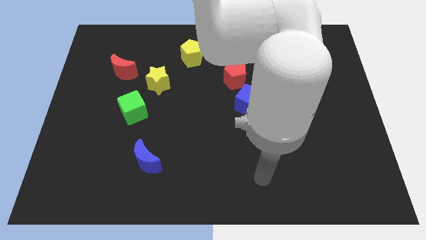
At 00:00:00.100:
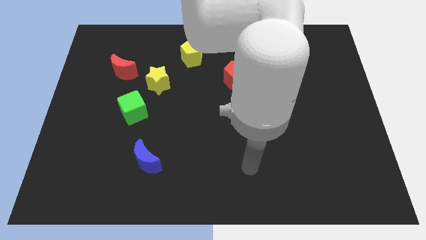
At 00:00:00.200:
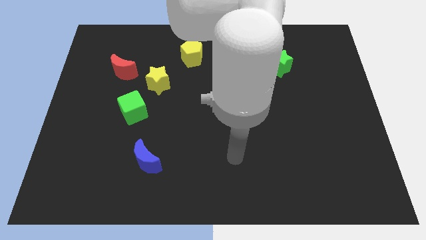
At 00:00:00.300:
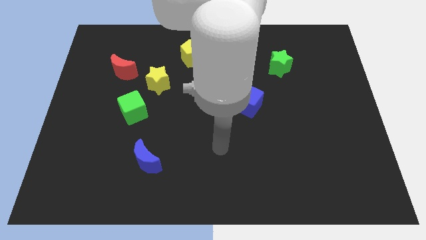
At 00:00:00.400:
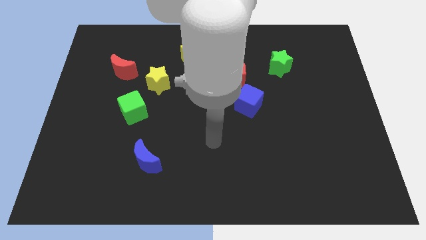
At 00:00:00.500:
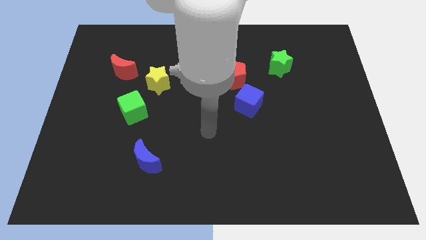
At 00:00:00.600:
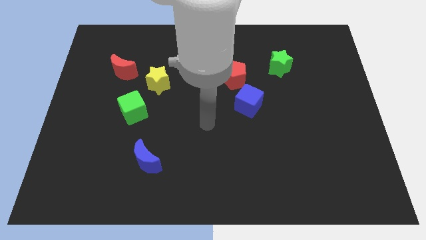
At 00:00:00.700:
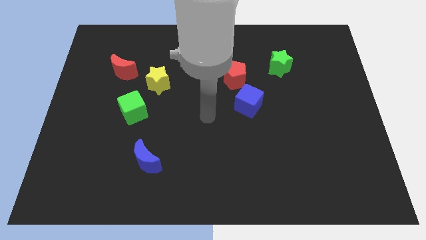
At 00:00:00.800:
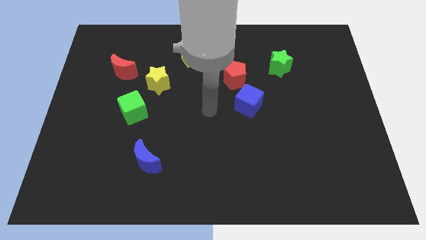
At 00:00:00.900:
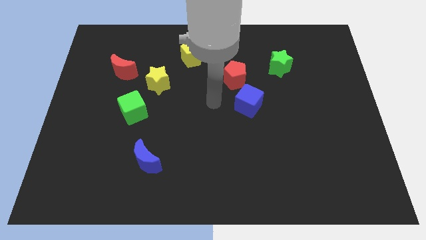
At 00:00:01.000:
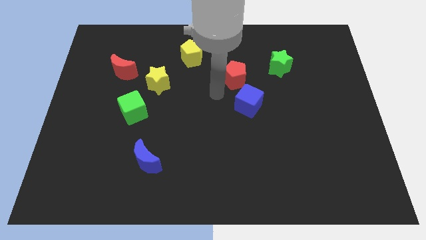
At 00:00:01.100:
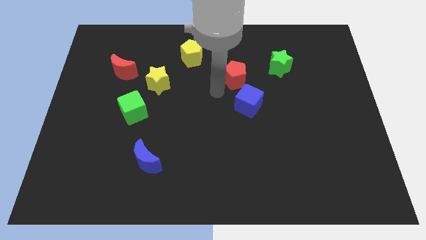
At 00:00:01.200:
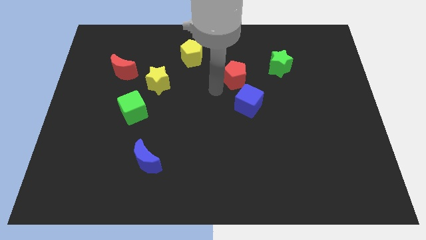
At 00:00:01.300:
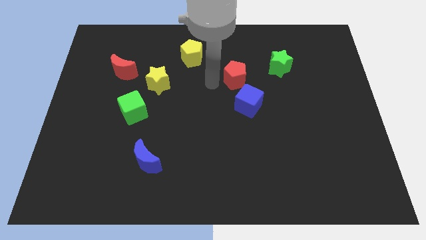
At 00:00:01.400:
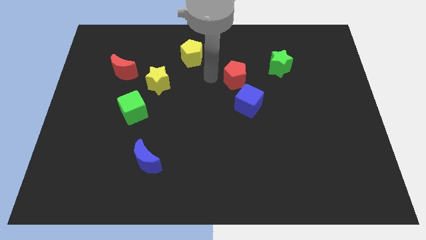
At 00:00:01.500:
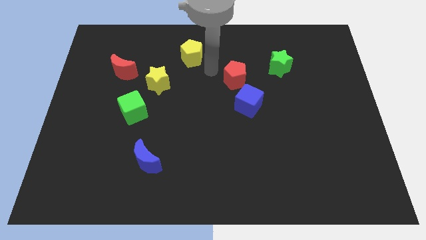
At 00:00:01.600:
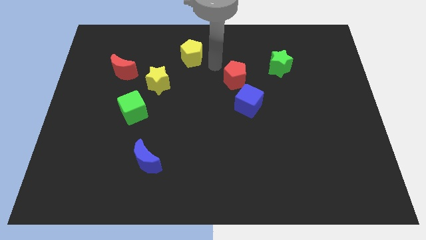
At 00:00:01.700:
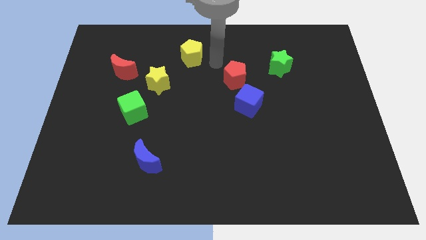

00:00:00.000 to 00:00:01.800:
place arm in between red and yellow pentagon

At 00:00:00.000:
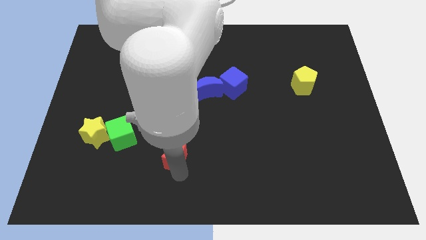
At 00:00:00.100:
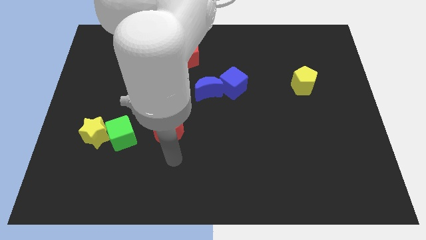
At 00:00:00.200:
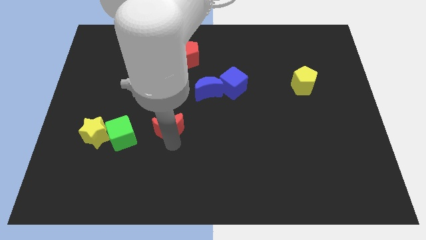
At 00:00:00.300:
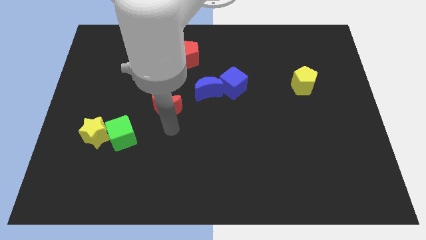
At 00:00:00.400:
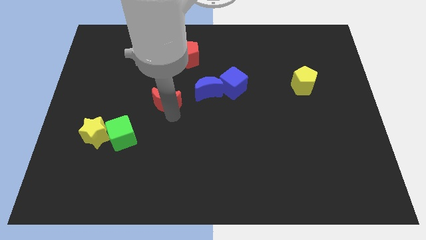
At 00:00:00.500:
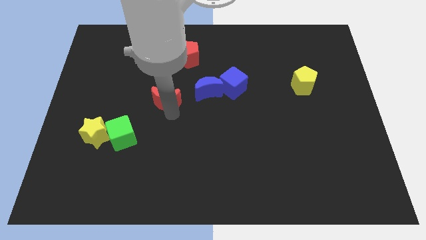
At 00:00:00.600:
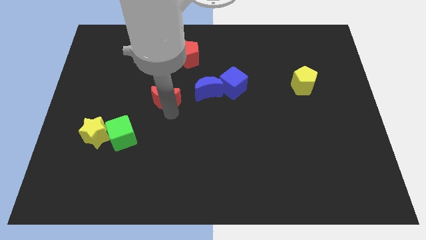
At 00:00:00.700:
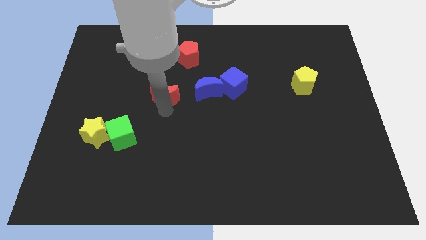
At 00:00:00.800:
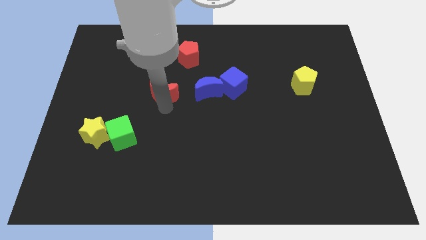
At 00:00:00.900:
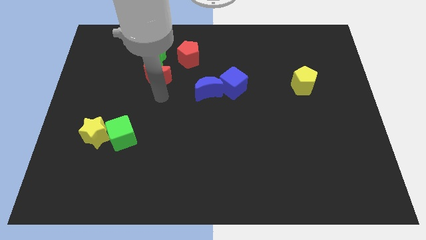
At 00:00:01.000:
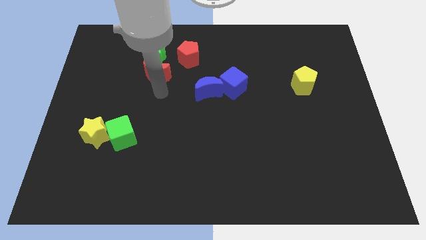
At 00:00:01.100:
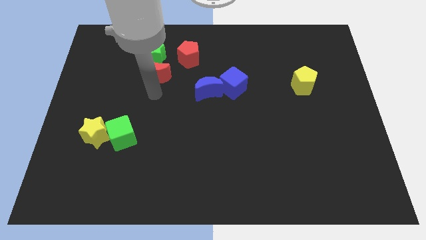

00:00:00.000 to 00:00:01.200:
move the red moon down to the green star

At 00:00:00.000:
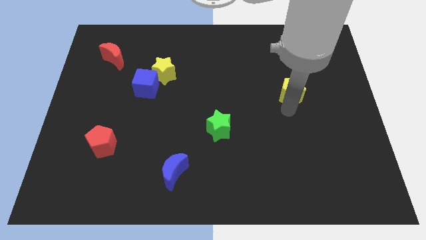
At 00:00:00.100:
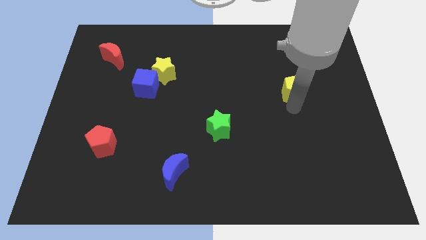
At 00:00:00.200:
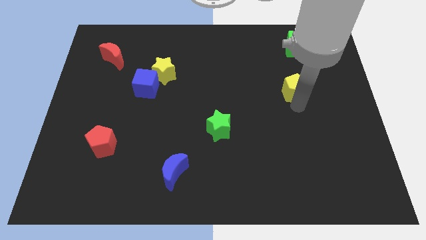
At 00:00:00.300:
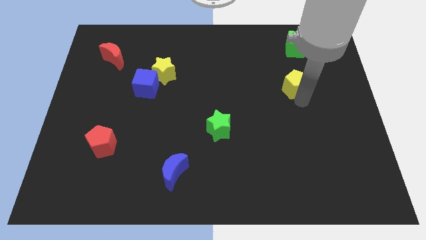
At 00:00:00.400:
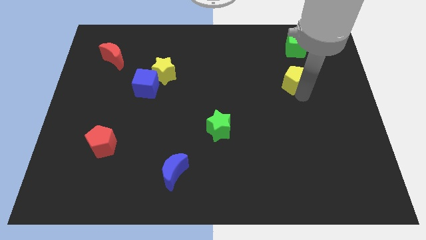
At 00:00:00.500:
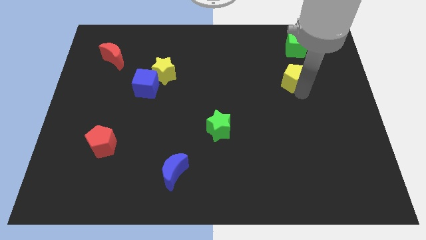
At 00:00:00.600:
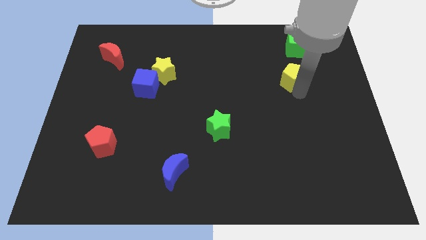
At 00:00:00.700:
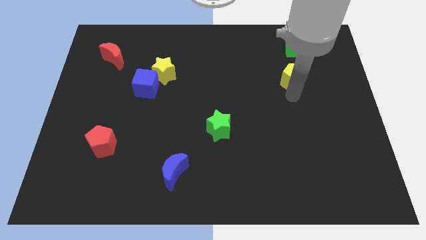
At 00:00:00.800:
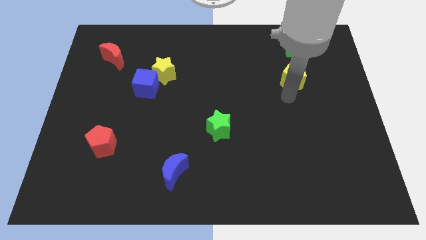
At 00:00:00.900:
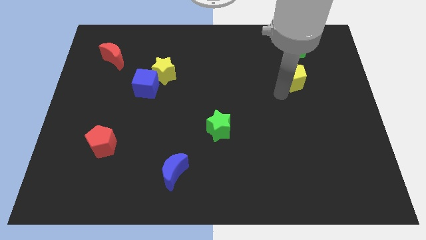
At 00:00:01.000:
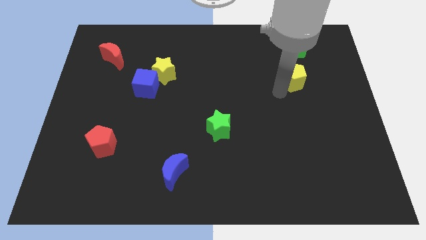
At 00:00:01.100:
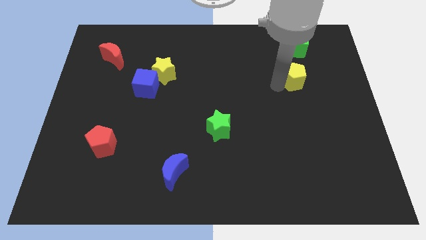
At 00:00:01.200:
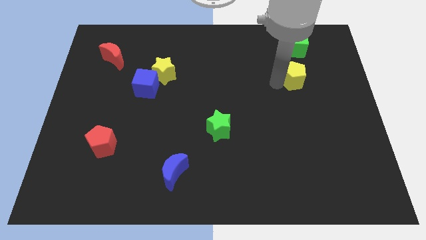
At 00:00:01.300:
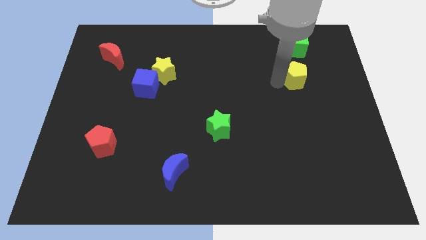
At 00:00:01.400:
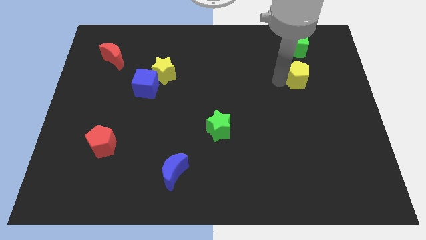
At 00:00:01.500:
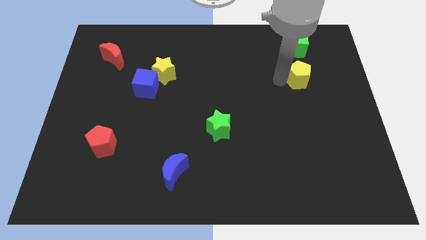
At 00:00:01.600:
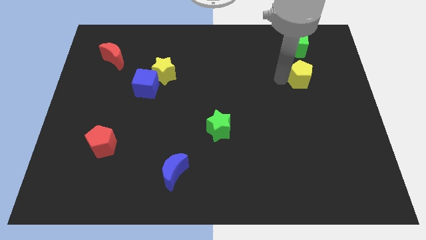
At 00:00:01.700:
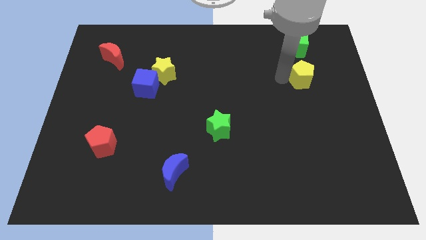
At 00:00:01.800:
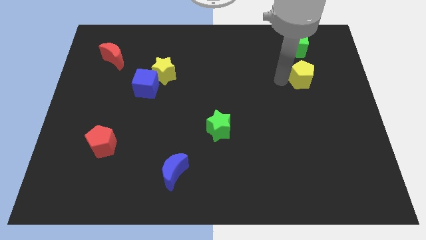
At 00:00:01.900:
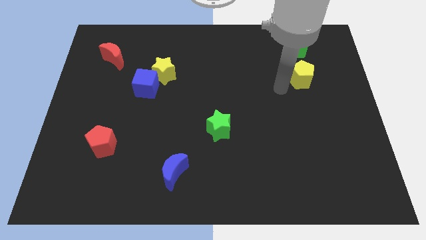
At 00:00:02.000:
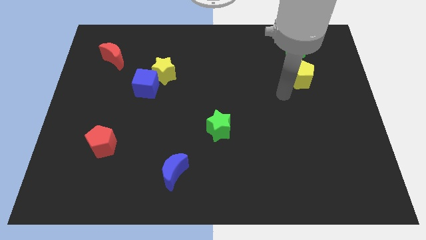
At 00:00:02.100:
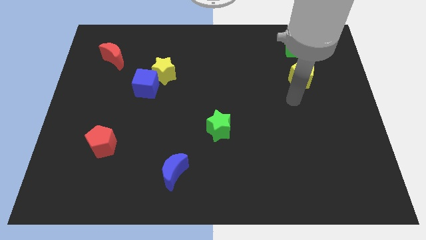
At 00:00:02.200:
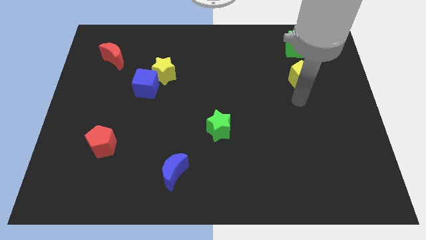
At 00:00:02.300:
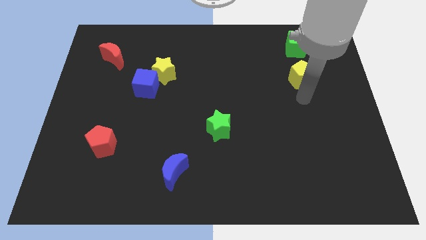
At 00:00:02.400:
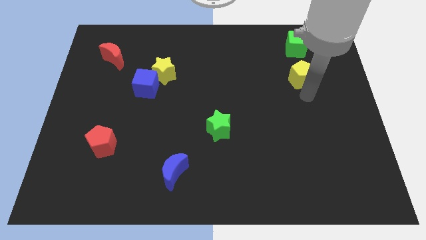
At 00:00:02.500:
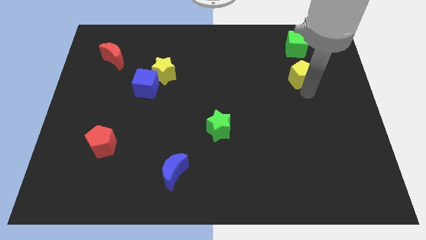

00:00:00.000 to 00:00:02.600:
move the yellow pentagon below the green cube

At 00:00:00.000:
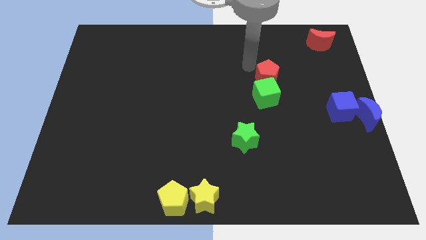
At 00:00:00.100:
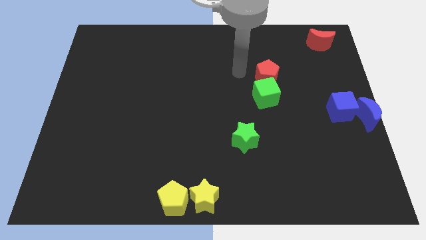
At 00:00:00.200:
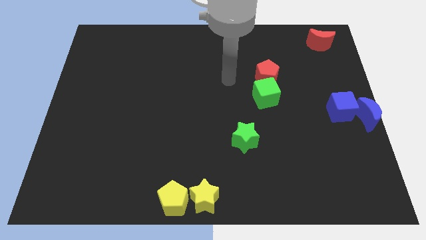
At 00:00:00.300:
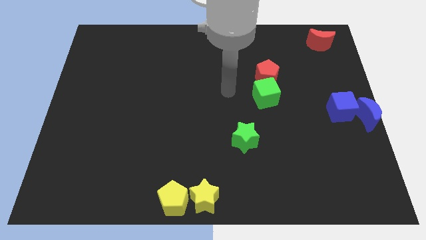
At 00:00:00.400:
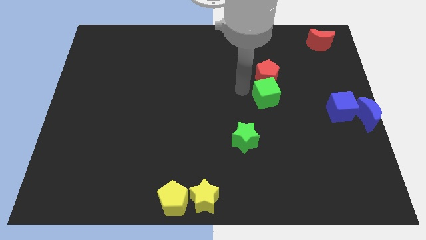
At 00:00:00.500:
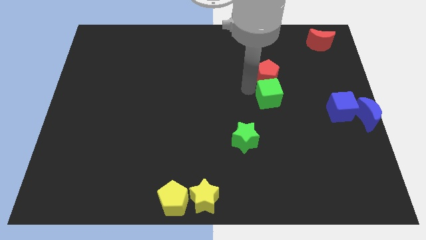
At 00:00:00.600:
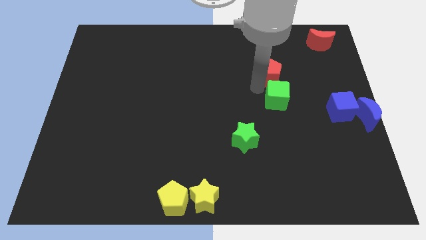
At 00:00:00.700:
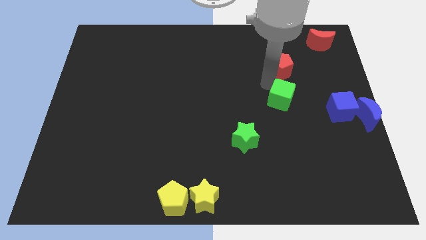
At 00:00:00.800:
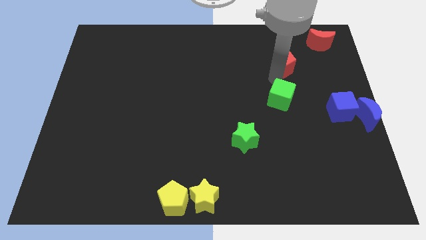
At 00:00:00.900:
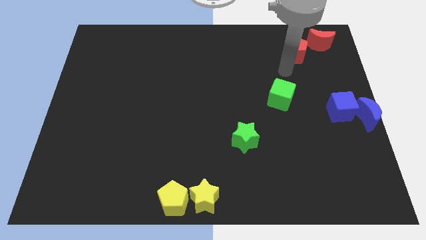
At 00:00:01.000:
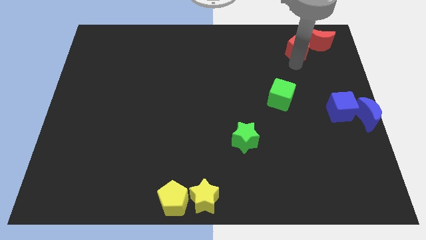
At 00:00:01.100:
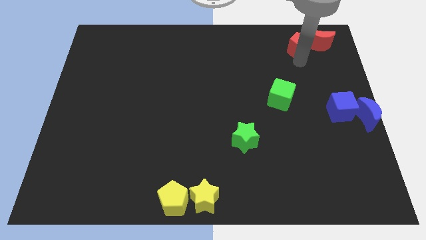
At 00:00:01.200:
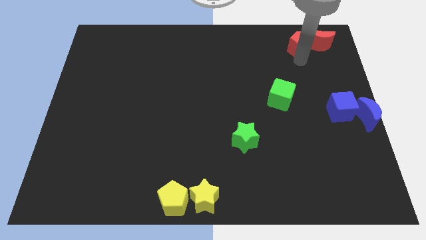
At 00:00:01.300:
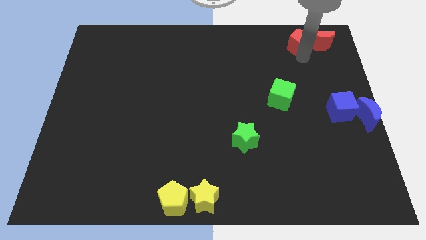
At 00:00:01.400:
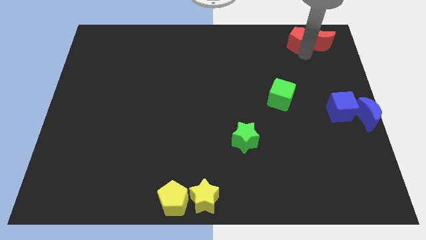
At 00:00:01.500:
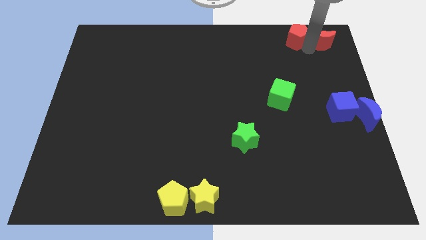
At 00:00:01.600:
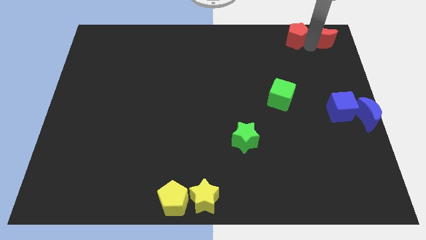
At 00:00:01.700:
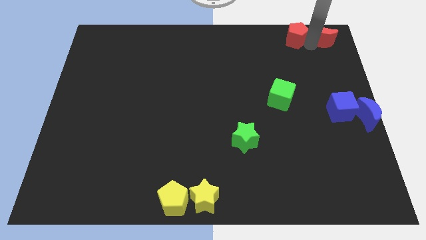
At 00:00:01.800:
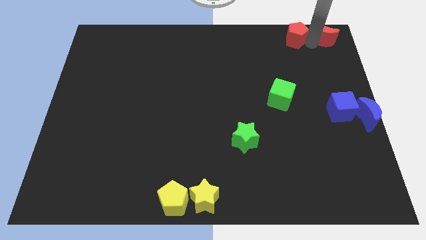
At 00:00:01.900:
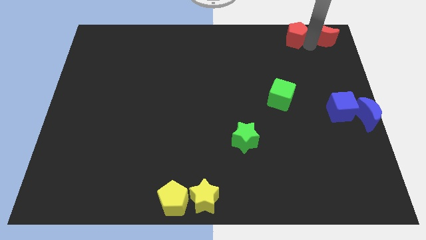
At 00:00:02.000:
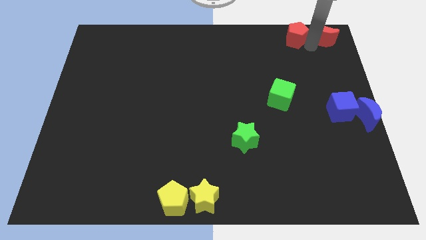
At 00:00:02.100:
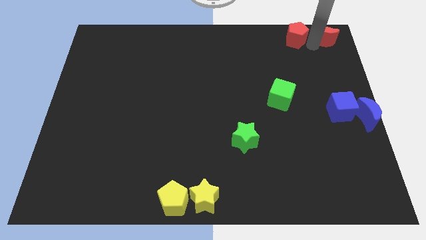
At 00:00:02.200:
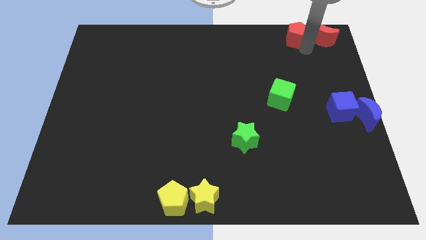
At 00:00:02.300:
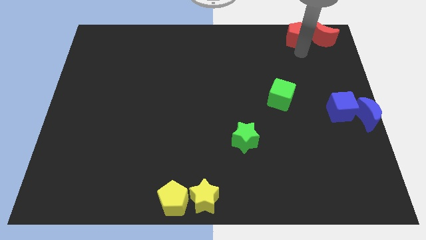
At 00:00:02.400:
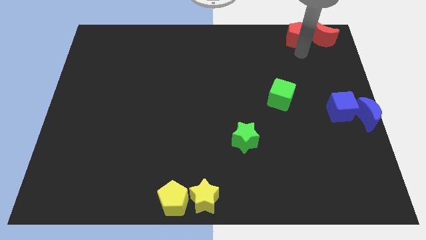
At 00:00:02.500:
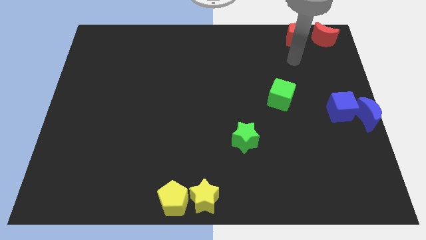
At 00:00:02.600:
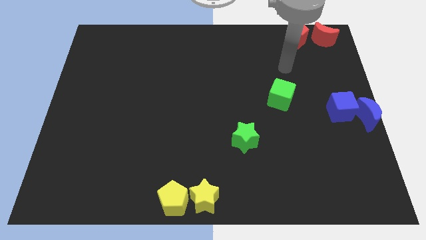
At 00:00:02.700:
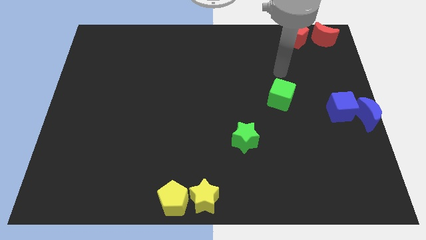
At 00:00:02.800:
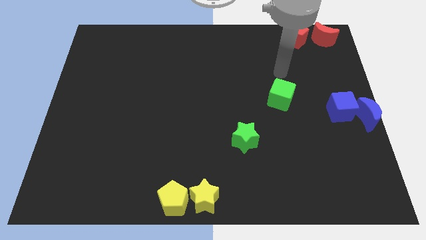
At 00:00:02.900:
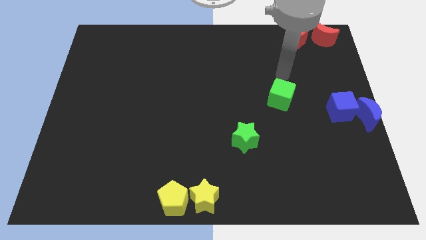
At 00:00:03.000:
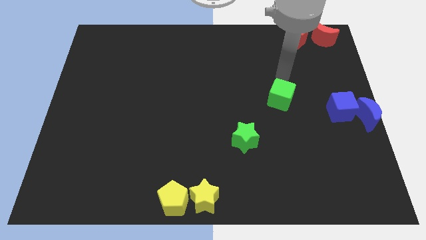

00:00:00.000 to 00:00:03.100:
push the red pentagon to the left side of red moon

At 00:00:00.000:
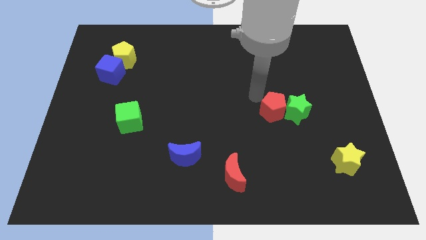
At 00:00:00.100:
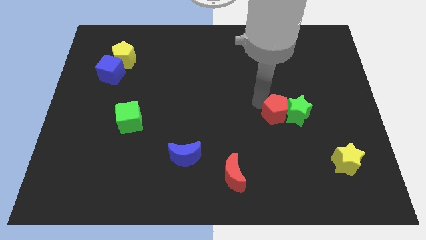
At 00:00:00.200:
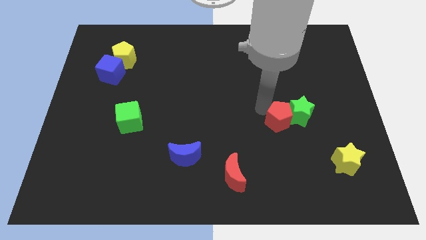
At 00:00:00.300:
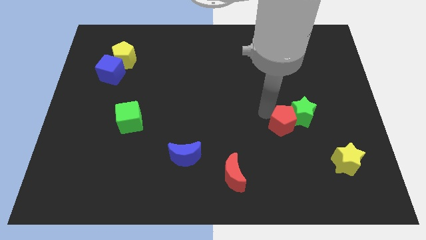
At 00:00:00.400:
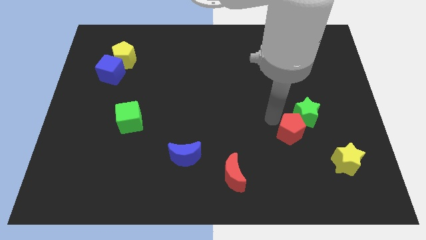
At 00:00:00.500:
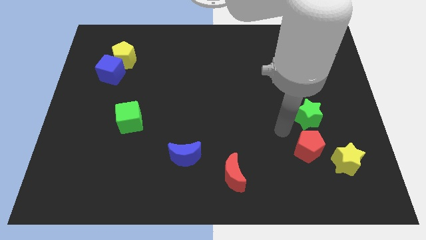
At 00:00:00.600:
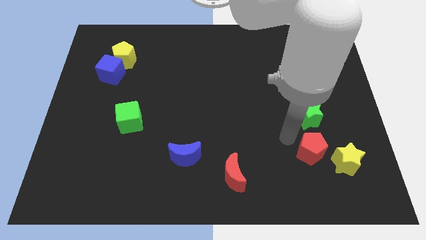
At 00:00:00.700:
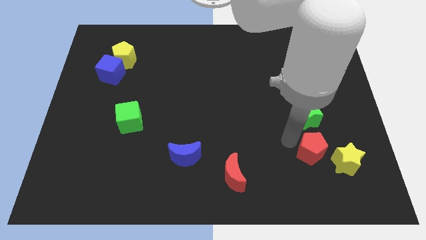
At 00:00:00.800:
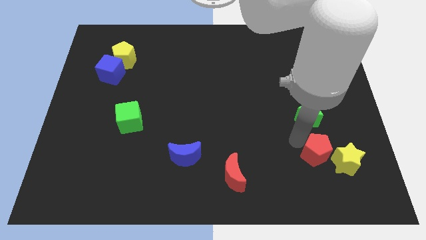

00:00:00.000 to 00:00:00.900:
place red pentagon to the bottom of green star
